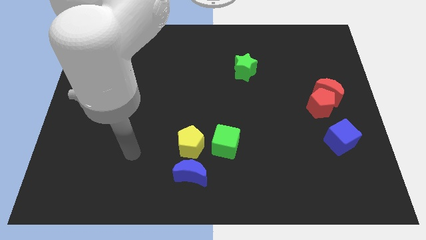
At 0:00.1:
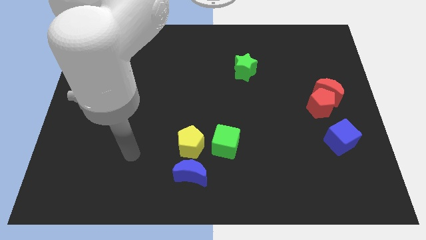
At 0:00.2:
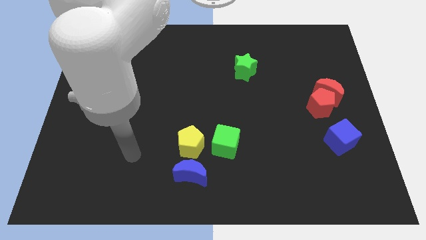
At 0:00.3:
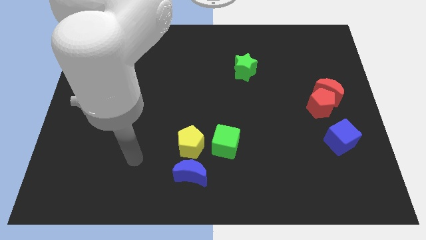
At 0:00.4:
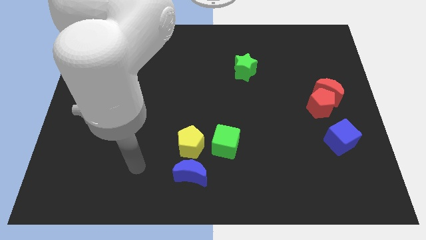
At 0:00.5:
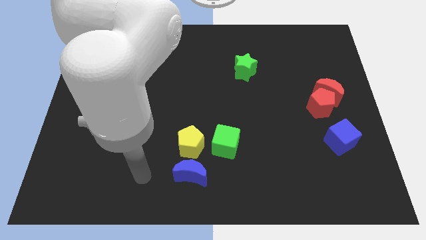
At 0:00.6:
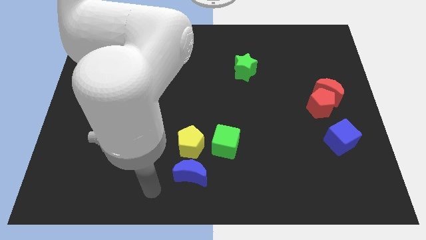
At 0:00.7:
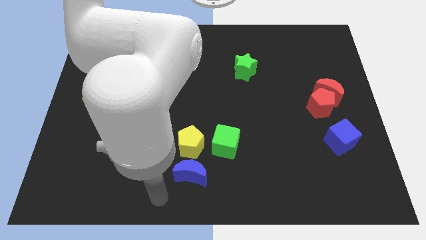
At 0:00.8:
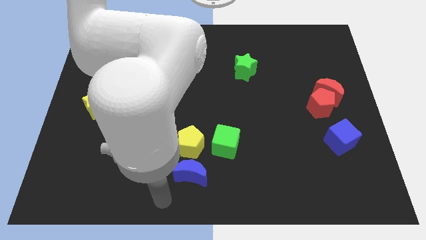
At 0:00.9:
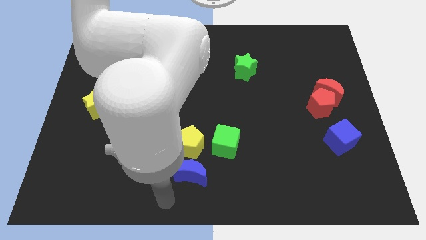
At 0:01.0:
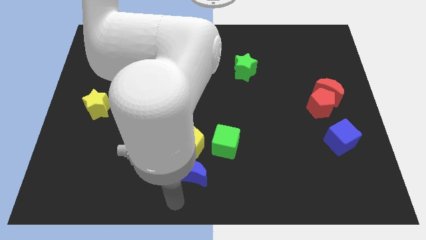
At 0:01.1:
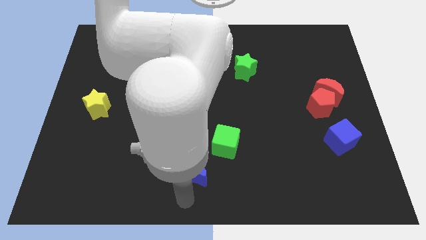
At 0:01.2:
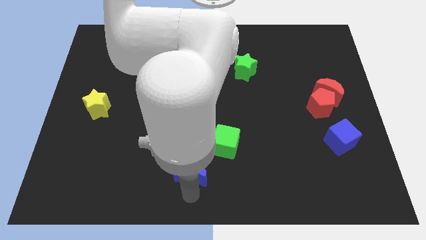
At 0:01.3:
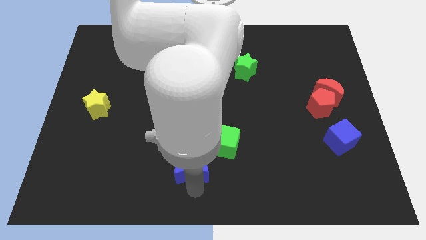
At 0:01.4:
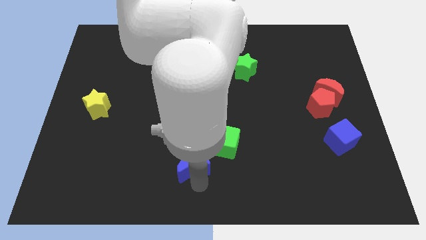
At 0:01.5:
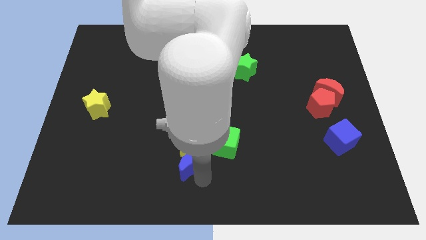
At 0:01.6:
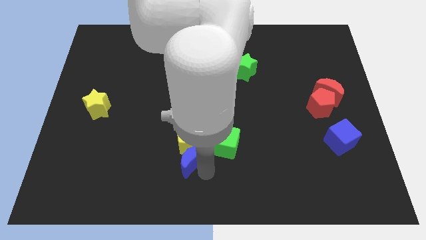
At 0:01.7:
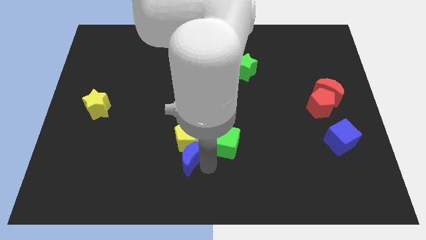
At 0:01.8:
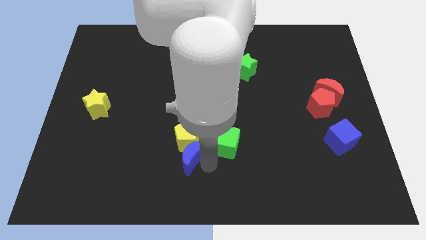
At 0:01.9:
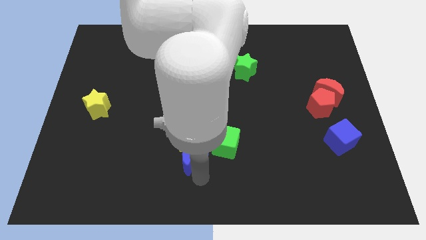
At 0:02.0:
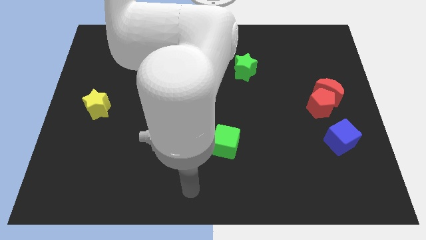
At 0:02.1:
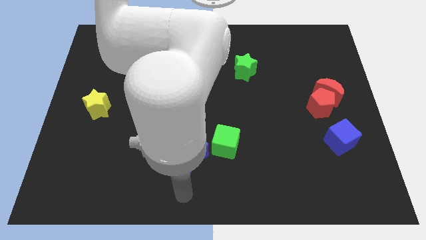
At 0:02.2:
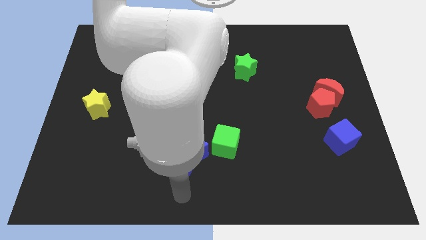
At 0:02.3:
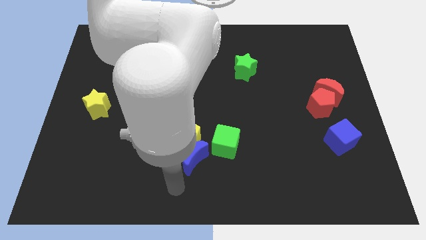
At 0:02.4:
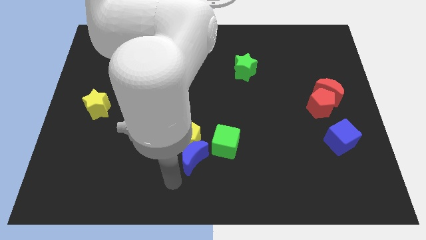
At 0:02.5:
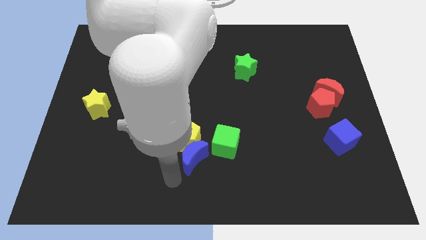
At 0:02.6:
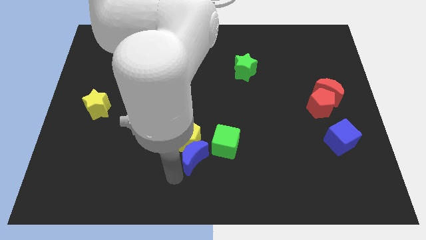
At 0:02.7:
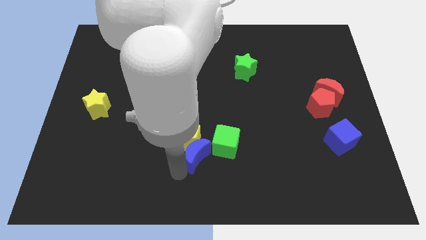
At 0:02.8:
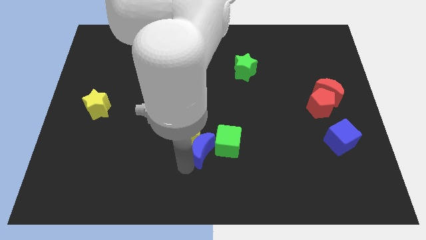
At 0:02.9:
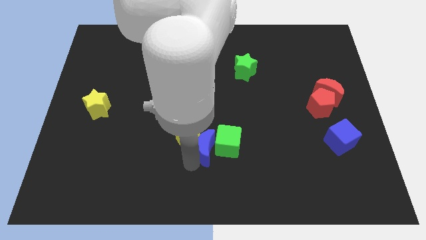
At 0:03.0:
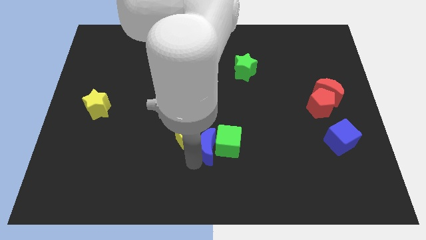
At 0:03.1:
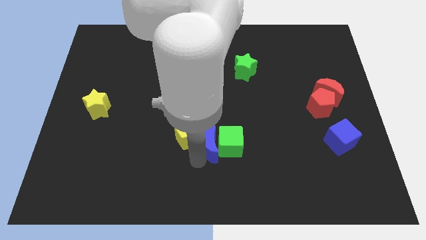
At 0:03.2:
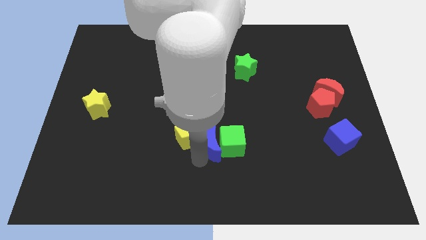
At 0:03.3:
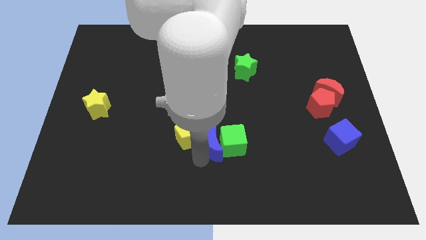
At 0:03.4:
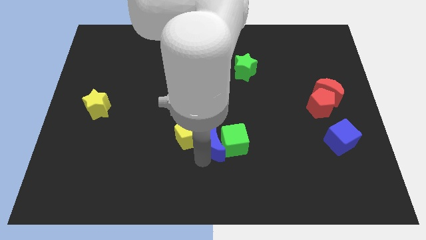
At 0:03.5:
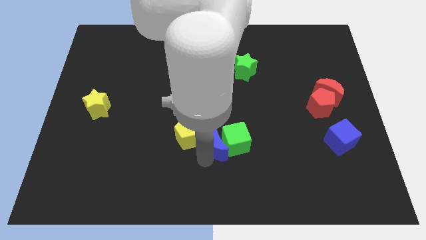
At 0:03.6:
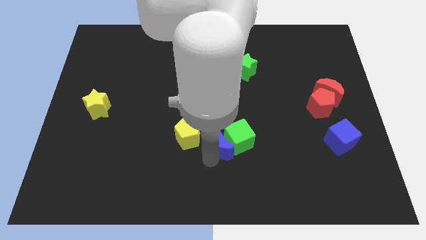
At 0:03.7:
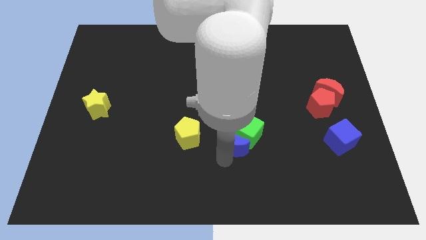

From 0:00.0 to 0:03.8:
push the blue moo slightly to the center

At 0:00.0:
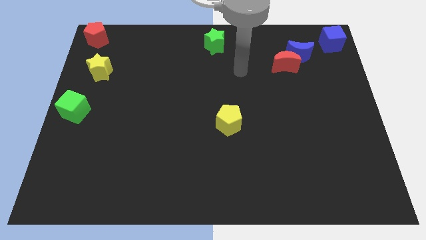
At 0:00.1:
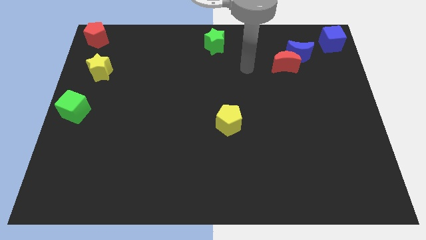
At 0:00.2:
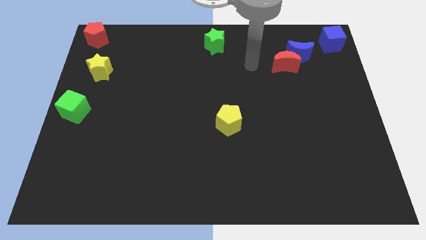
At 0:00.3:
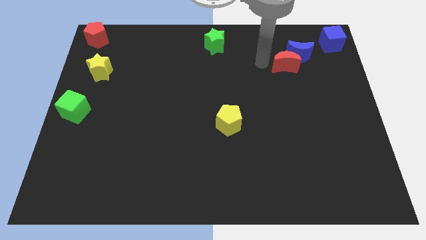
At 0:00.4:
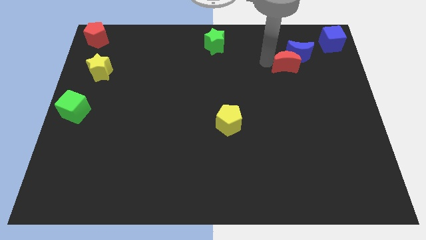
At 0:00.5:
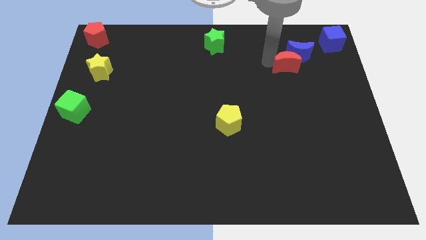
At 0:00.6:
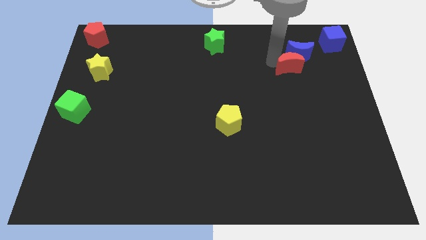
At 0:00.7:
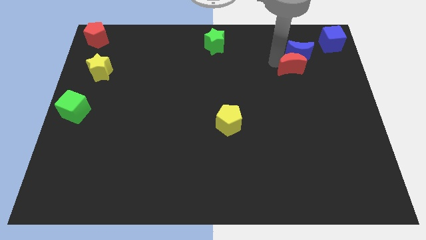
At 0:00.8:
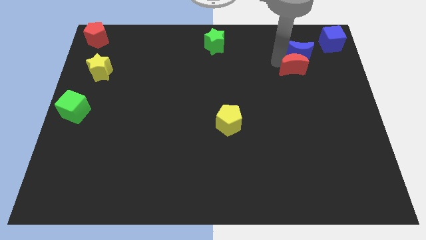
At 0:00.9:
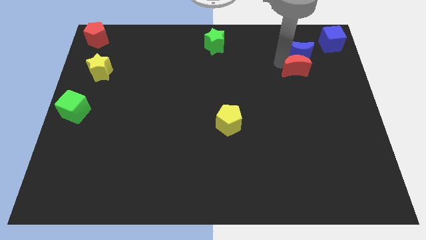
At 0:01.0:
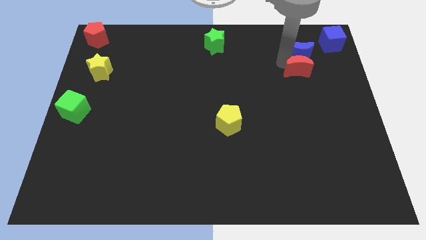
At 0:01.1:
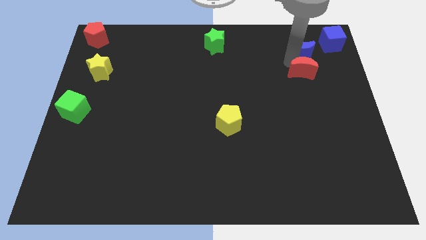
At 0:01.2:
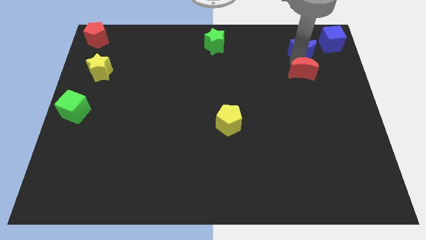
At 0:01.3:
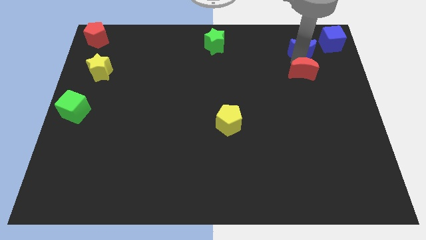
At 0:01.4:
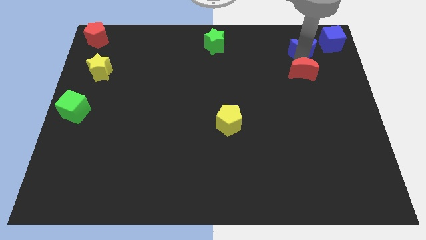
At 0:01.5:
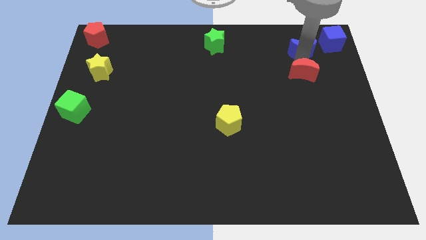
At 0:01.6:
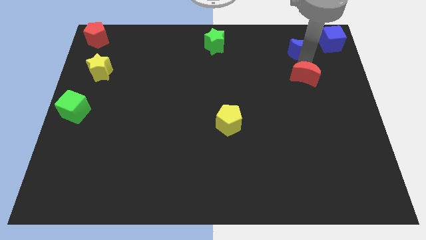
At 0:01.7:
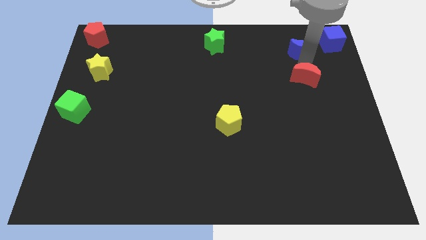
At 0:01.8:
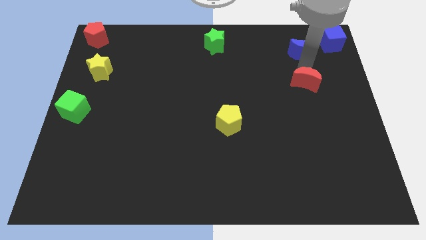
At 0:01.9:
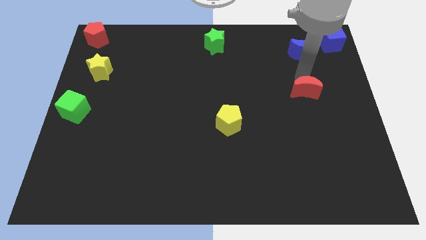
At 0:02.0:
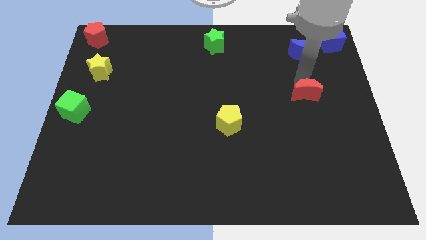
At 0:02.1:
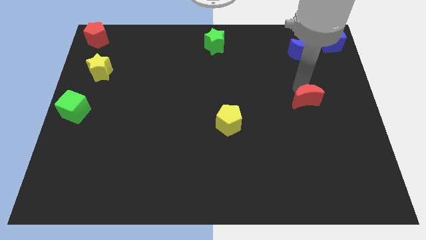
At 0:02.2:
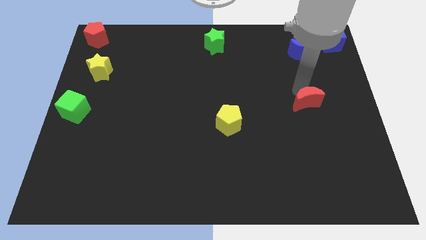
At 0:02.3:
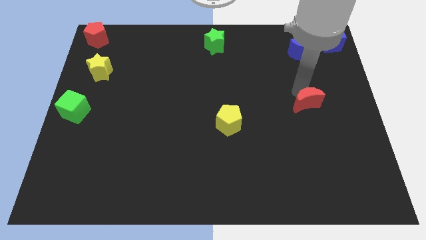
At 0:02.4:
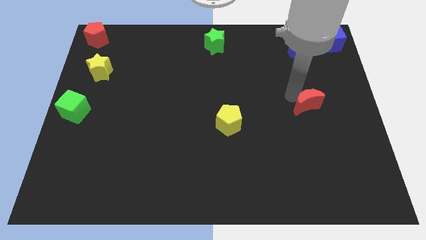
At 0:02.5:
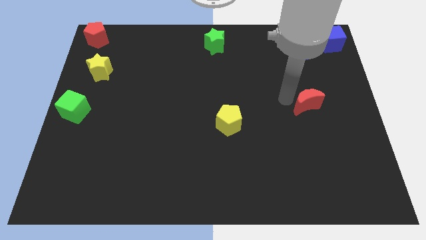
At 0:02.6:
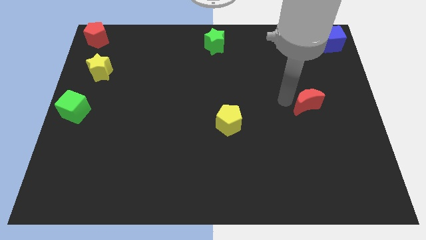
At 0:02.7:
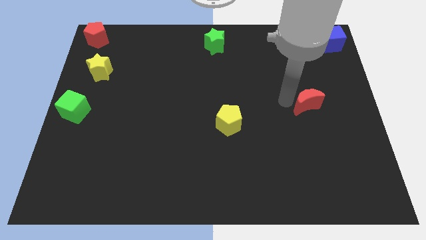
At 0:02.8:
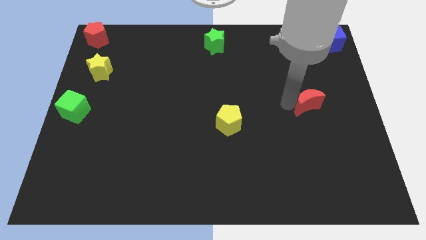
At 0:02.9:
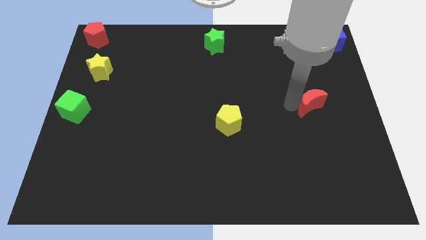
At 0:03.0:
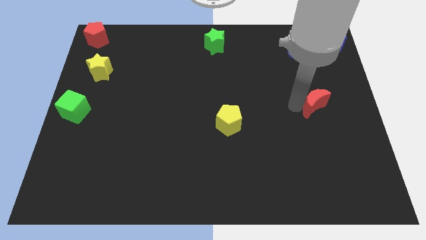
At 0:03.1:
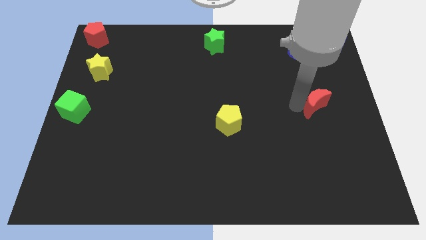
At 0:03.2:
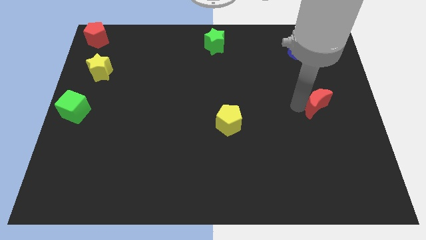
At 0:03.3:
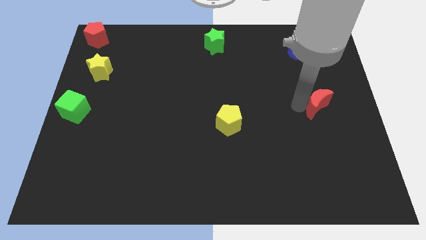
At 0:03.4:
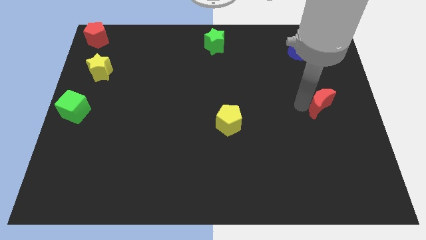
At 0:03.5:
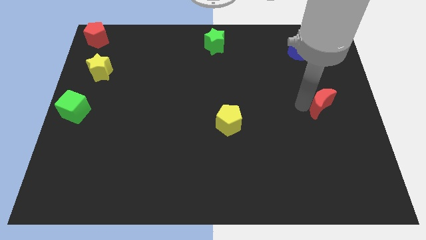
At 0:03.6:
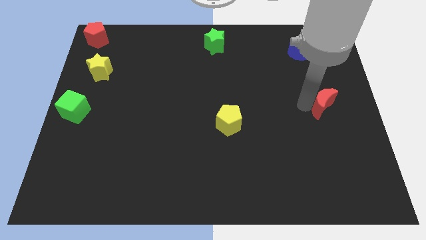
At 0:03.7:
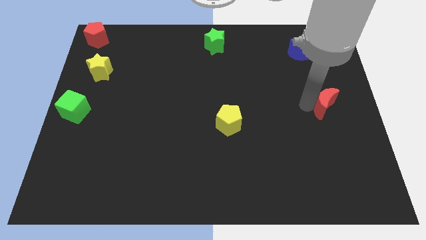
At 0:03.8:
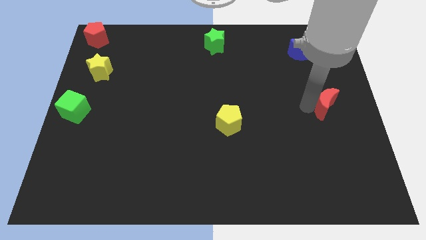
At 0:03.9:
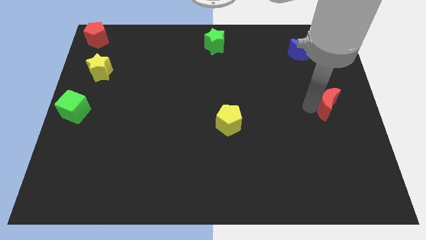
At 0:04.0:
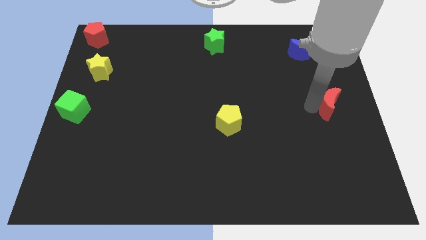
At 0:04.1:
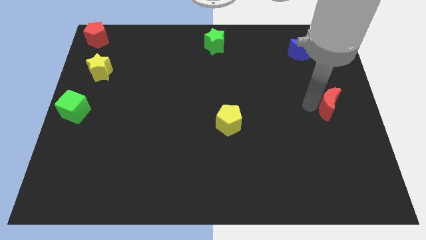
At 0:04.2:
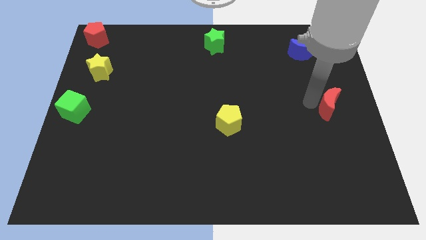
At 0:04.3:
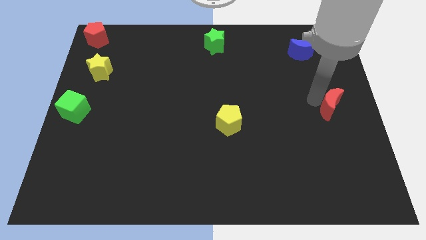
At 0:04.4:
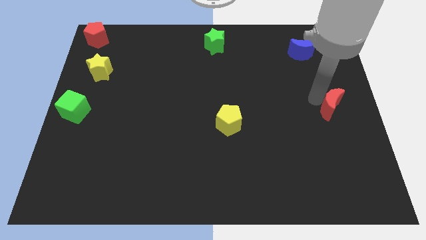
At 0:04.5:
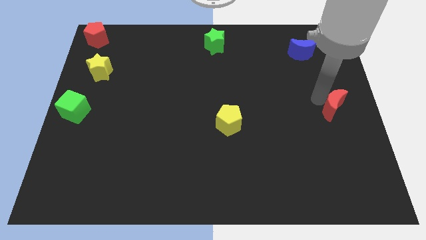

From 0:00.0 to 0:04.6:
separate the red crescent from the blue crescent

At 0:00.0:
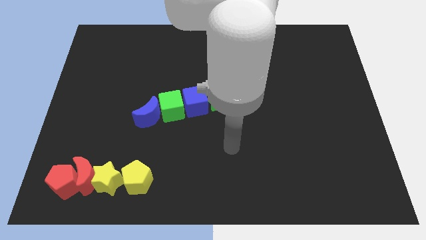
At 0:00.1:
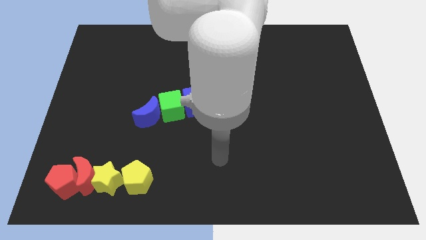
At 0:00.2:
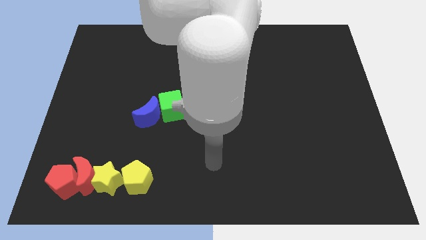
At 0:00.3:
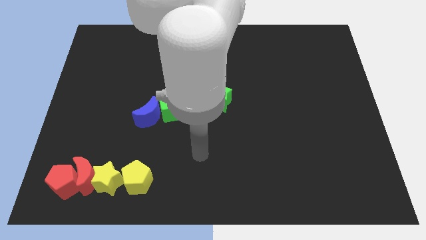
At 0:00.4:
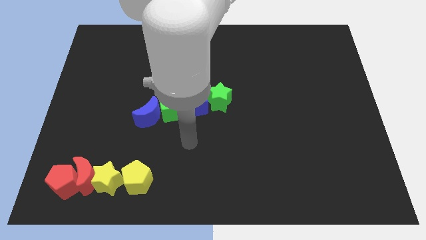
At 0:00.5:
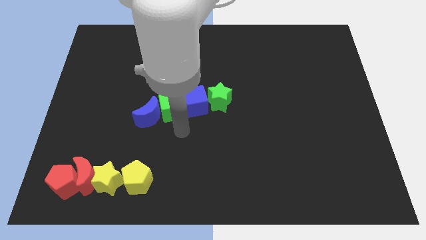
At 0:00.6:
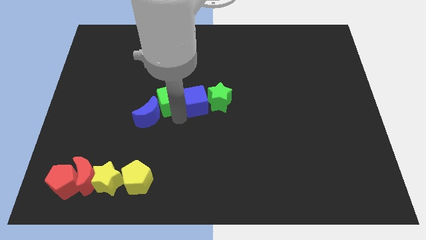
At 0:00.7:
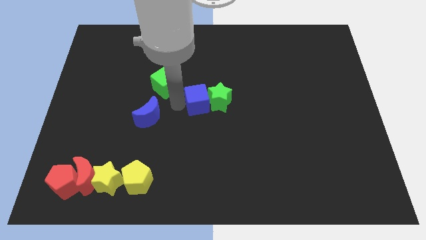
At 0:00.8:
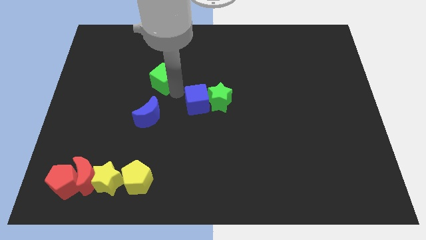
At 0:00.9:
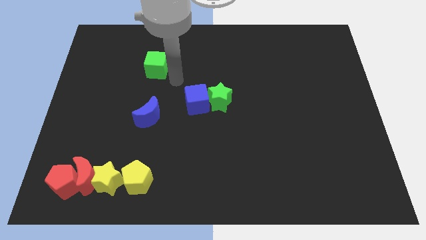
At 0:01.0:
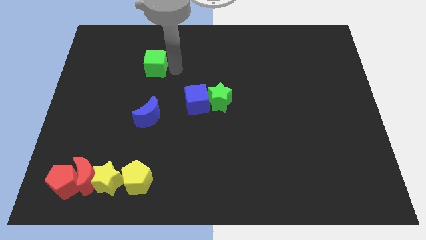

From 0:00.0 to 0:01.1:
move the green cube to the top of the blue crescent
